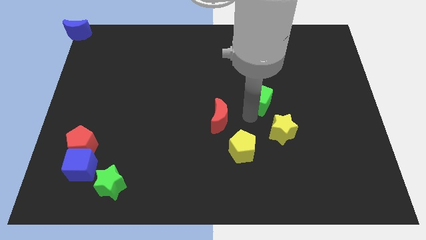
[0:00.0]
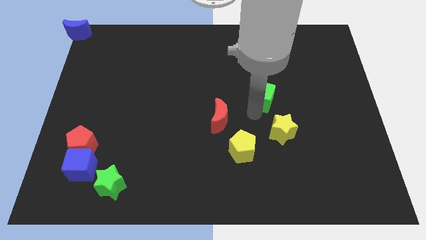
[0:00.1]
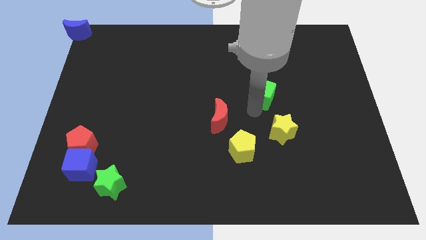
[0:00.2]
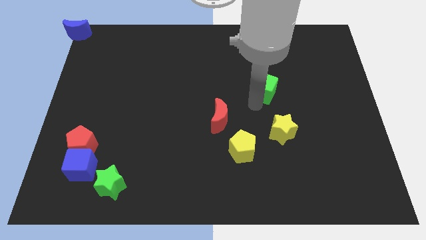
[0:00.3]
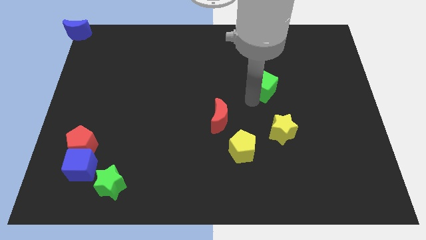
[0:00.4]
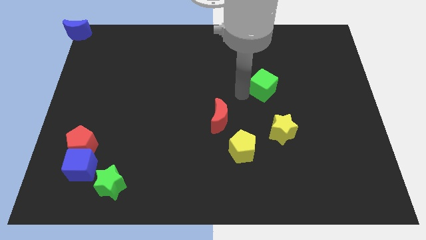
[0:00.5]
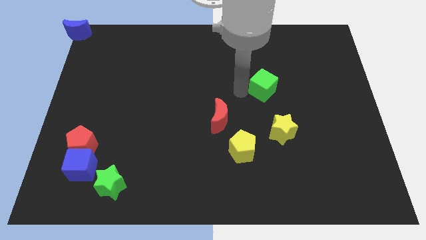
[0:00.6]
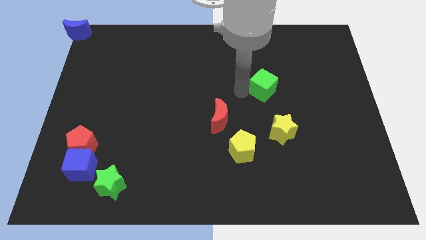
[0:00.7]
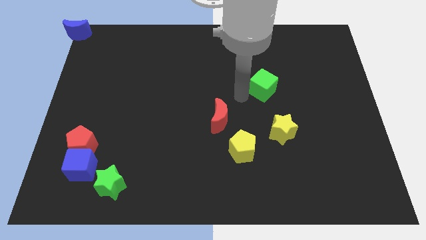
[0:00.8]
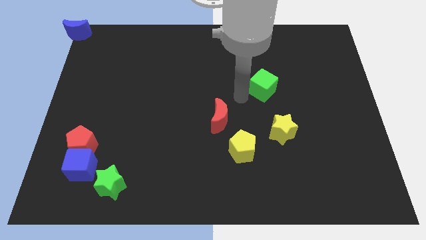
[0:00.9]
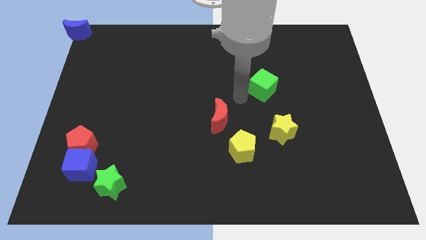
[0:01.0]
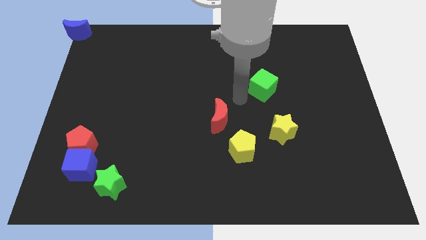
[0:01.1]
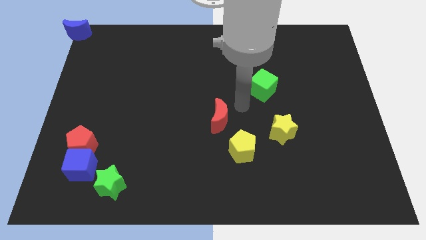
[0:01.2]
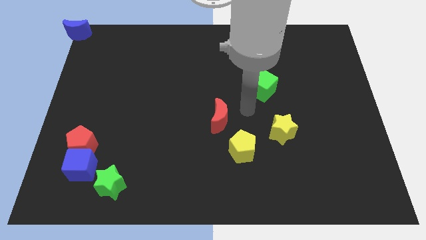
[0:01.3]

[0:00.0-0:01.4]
slightly push the green cube vertically to the top of the yellow star

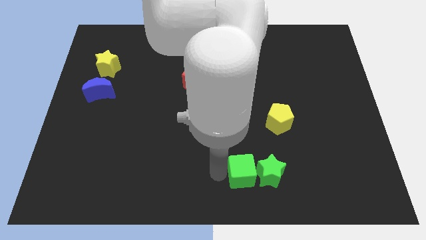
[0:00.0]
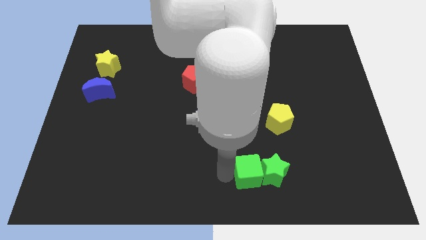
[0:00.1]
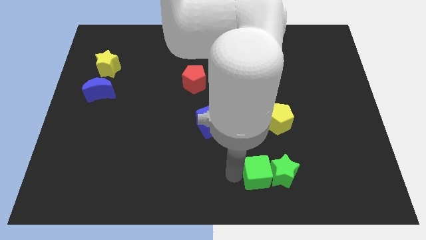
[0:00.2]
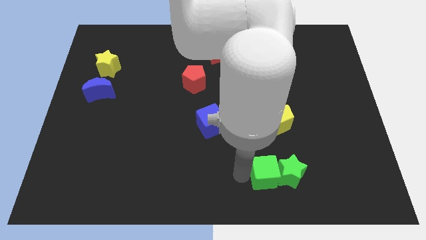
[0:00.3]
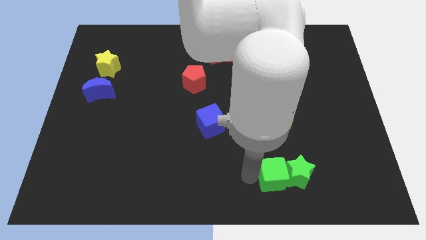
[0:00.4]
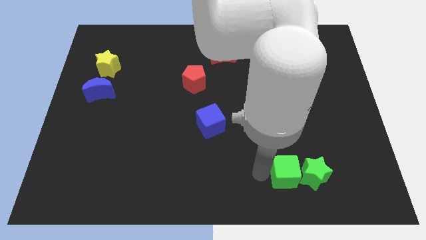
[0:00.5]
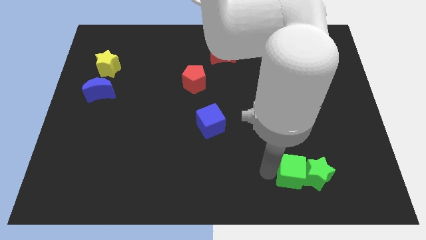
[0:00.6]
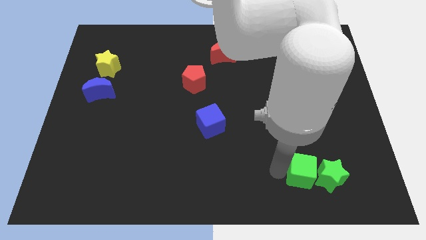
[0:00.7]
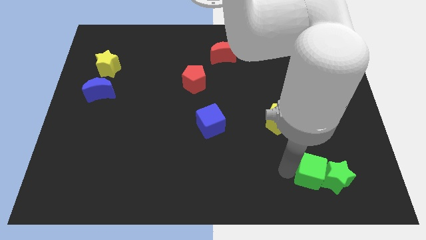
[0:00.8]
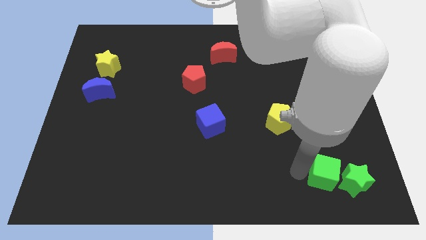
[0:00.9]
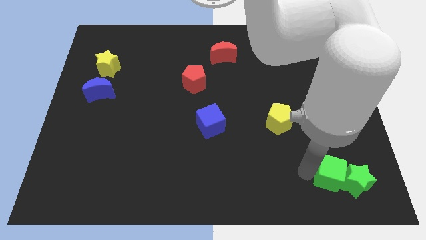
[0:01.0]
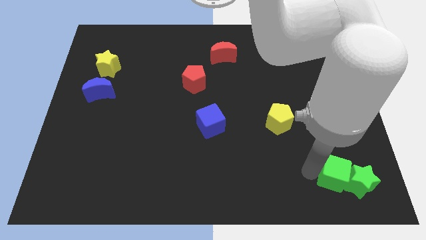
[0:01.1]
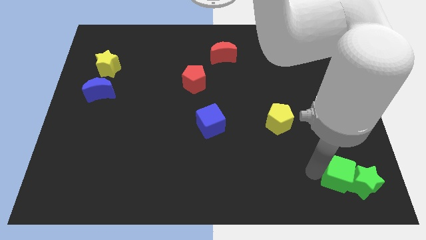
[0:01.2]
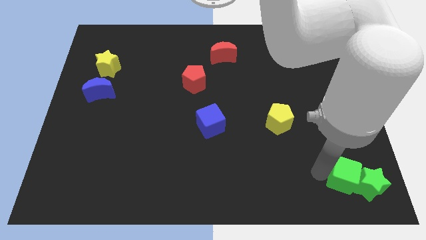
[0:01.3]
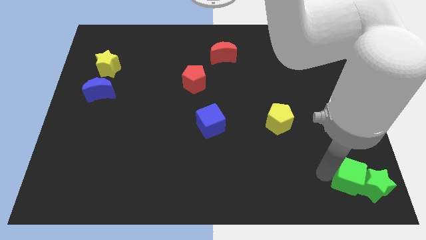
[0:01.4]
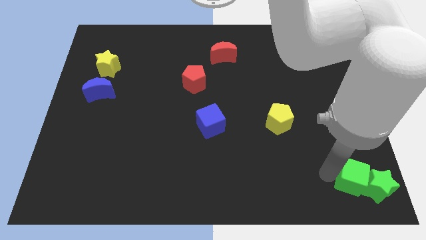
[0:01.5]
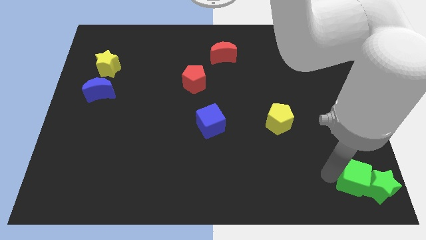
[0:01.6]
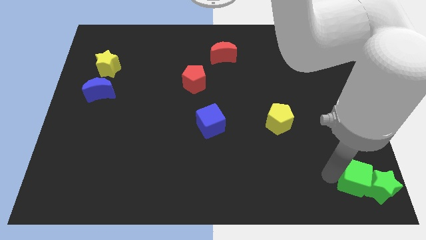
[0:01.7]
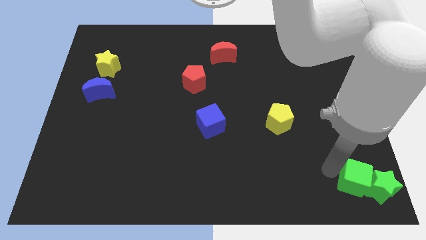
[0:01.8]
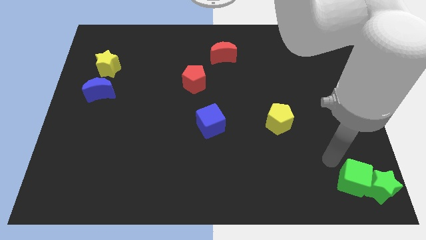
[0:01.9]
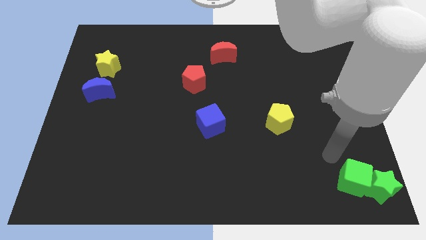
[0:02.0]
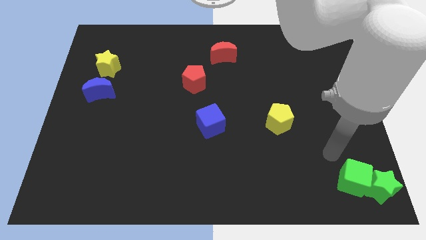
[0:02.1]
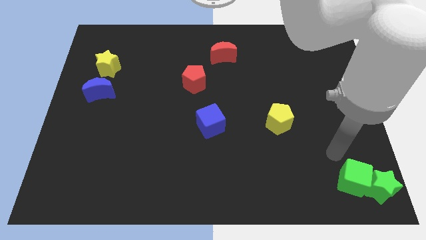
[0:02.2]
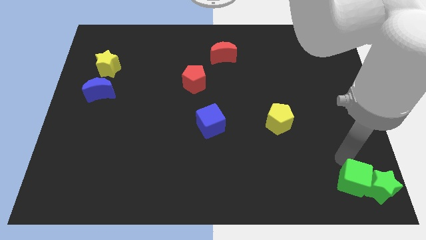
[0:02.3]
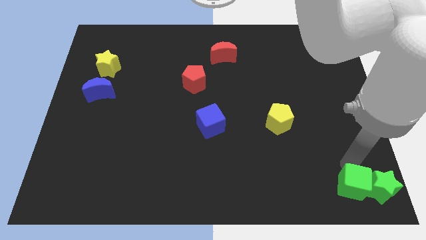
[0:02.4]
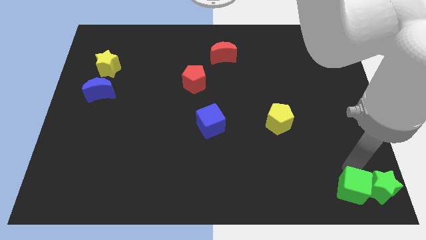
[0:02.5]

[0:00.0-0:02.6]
move the green star to the bottom right corner with the green cube

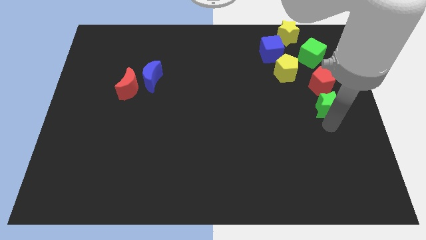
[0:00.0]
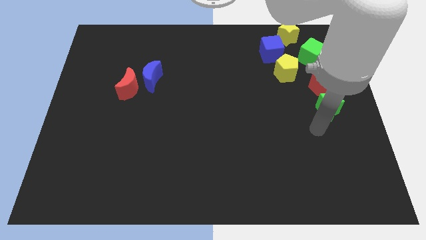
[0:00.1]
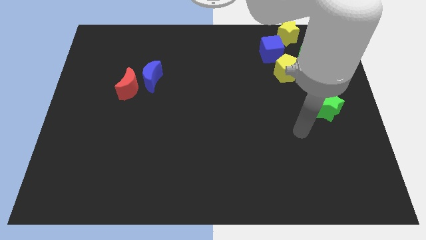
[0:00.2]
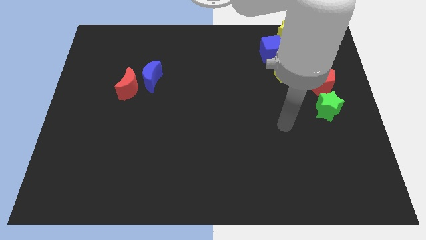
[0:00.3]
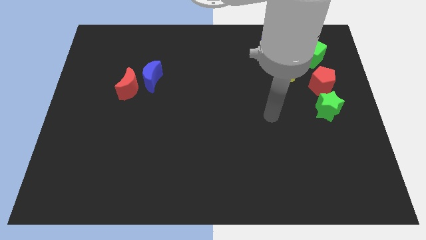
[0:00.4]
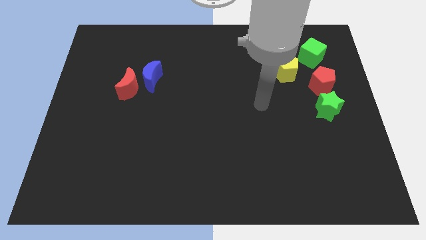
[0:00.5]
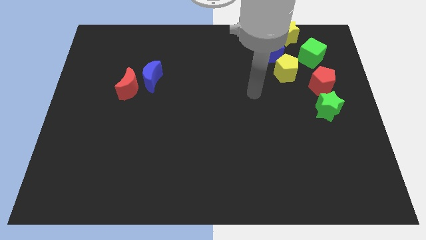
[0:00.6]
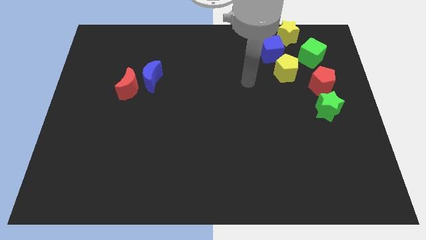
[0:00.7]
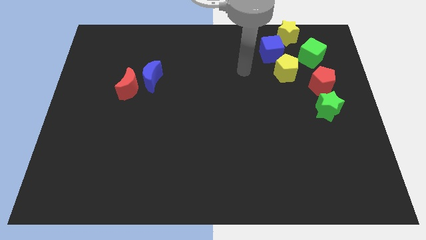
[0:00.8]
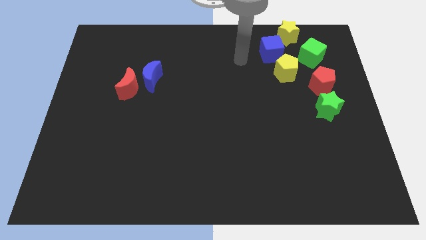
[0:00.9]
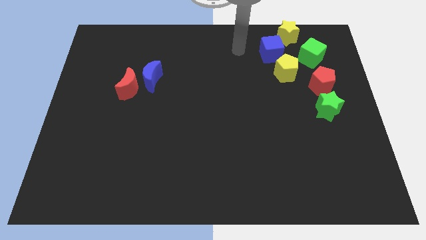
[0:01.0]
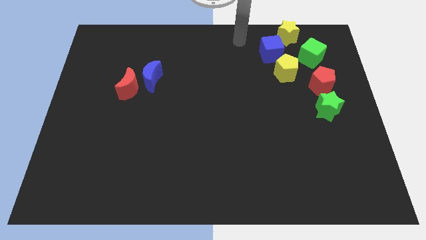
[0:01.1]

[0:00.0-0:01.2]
point your arm at the left of the blue cube

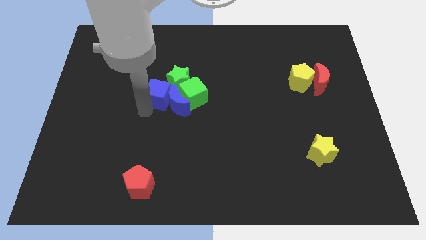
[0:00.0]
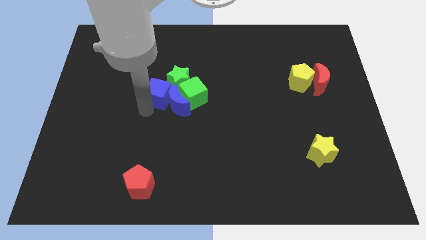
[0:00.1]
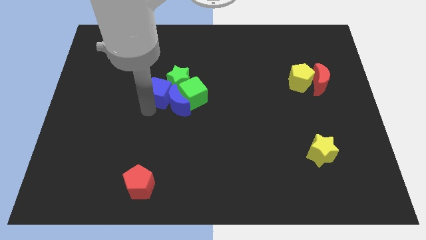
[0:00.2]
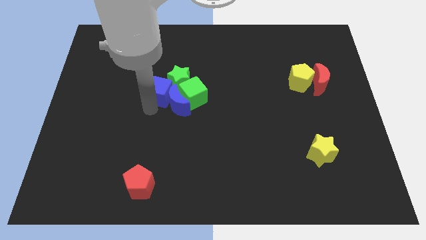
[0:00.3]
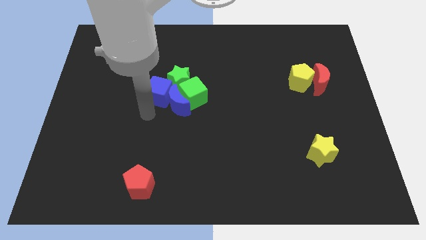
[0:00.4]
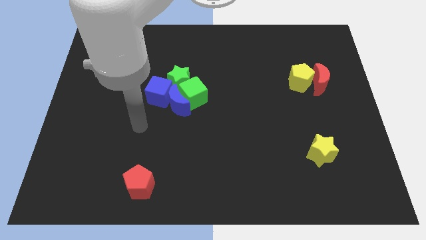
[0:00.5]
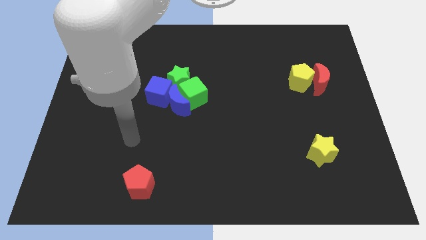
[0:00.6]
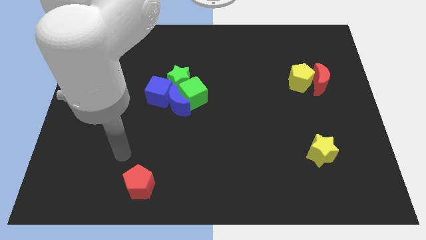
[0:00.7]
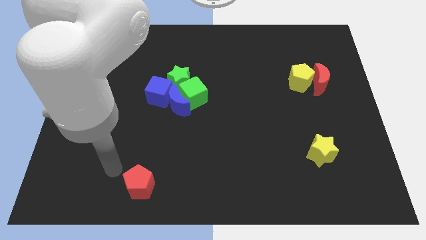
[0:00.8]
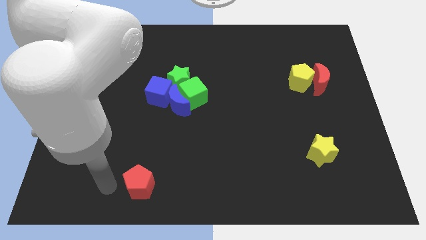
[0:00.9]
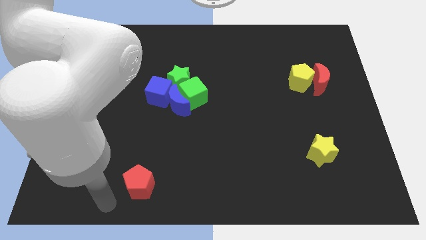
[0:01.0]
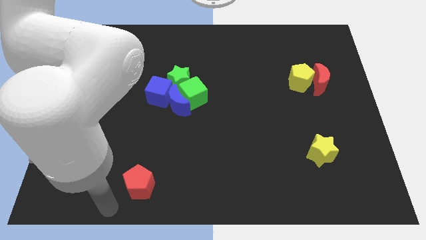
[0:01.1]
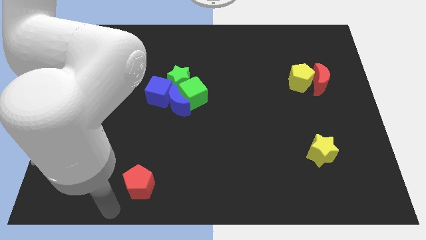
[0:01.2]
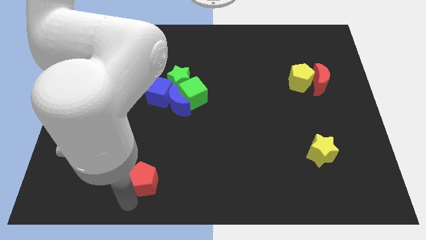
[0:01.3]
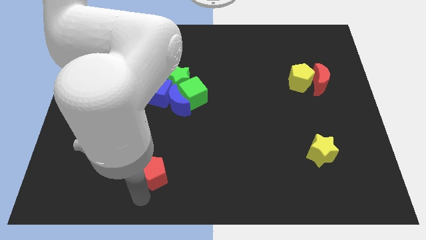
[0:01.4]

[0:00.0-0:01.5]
put your arm at the bottom left of the red pentagon

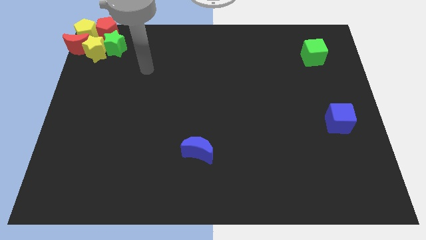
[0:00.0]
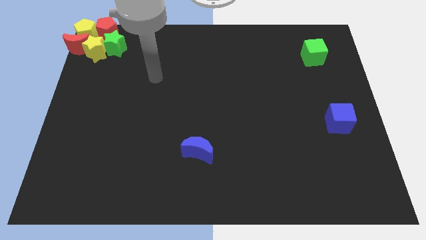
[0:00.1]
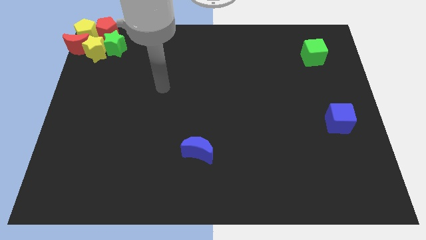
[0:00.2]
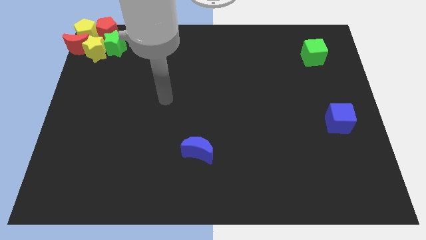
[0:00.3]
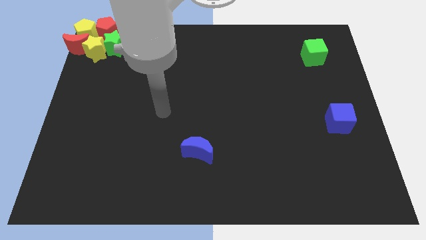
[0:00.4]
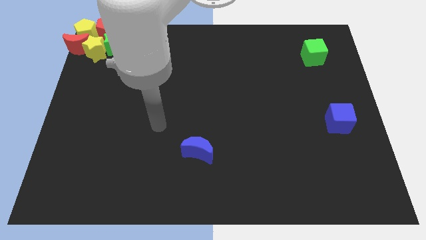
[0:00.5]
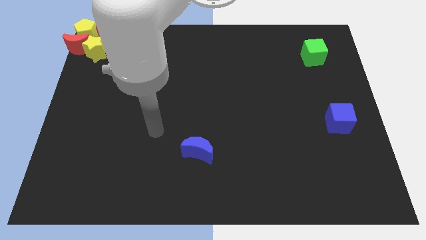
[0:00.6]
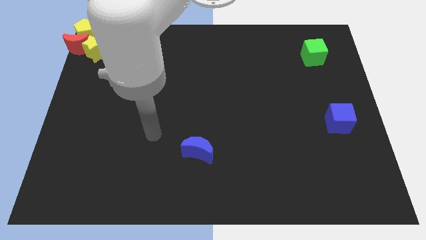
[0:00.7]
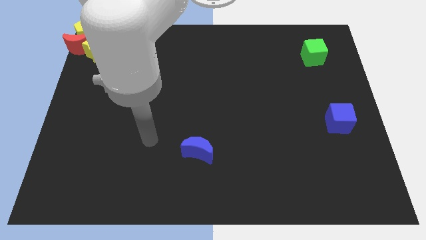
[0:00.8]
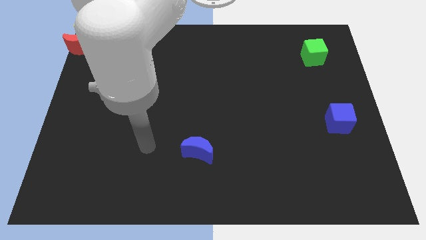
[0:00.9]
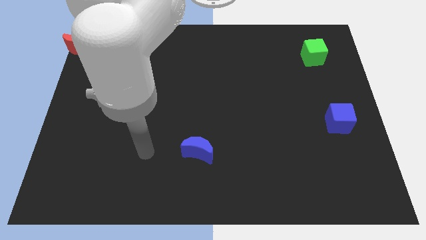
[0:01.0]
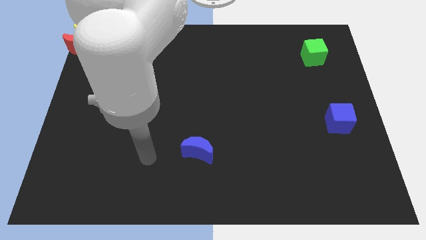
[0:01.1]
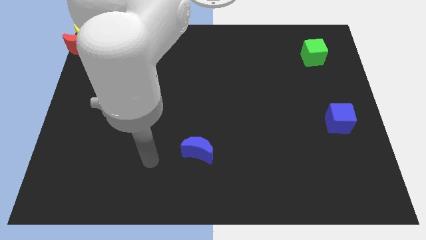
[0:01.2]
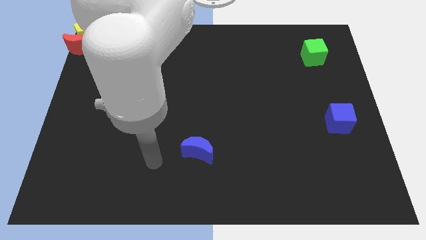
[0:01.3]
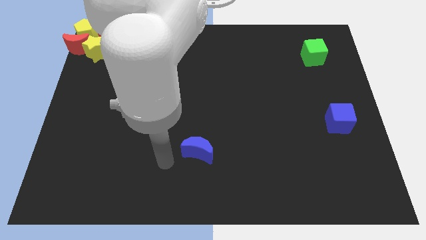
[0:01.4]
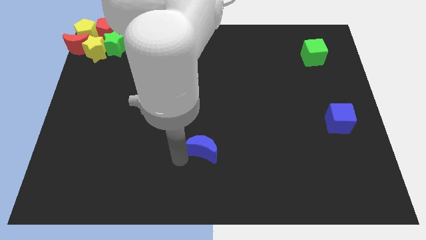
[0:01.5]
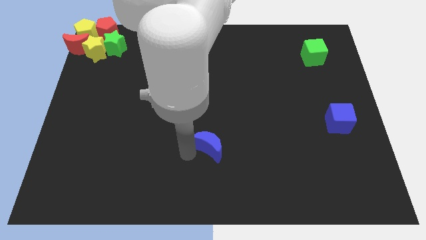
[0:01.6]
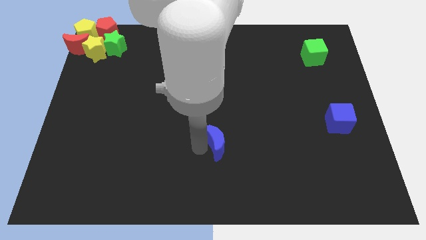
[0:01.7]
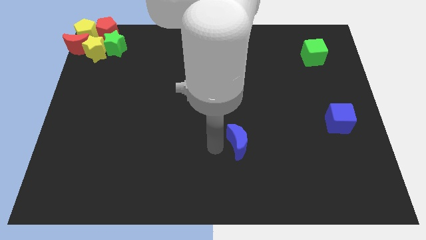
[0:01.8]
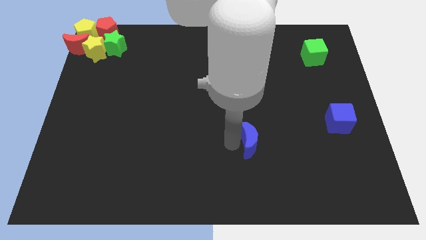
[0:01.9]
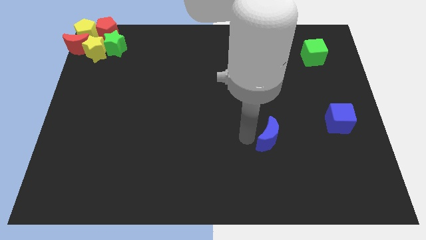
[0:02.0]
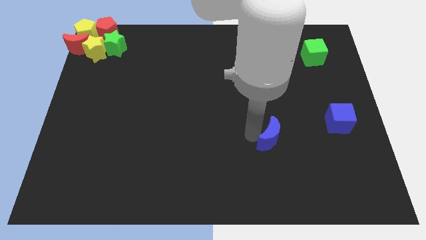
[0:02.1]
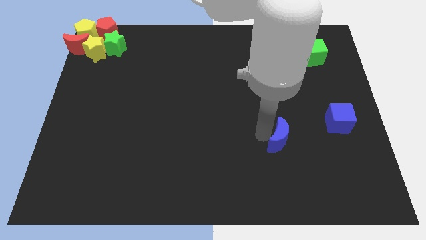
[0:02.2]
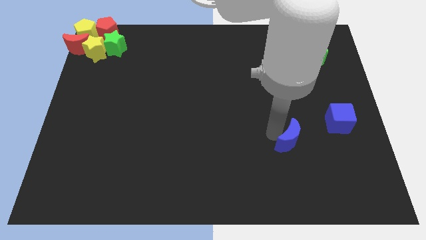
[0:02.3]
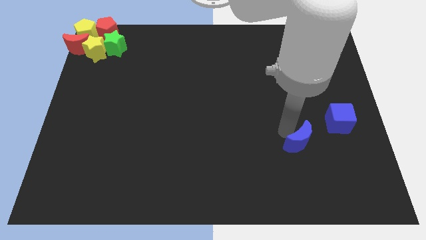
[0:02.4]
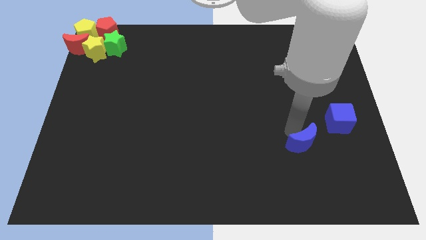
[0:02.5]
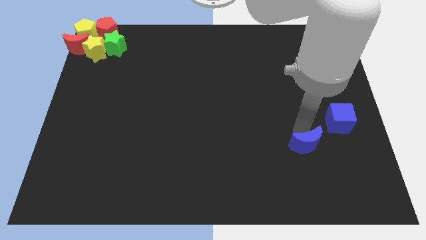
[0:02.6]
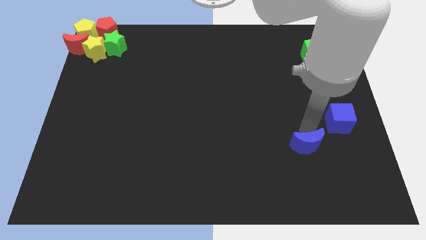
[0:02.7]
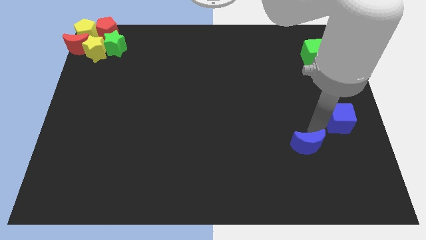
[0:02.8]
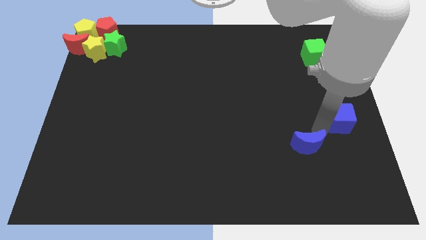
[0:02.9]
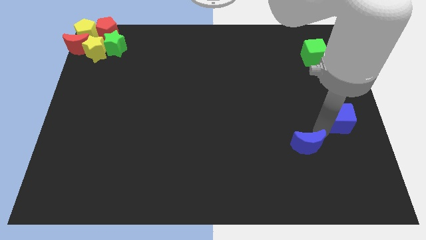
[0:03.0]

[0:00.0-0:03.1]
move the blue crescent to the bottom left of the blue cube
